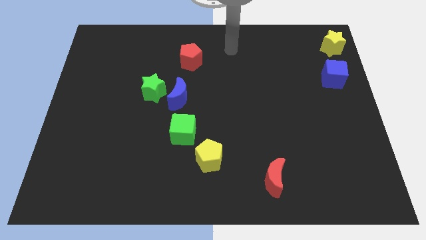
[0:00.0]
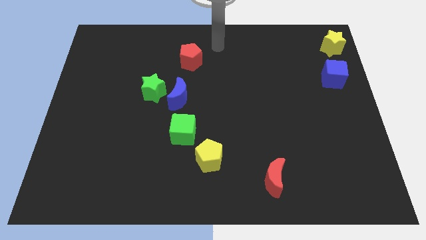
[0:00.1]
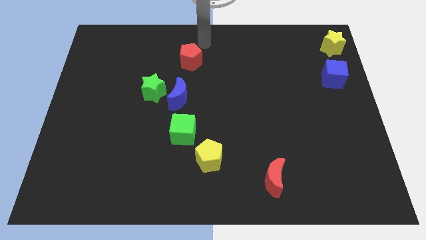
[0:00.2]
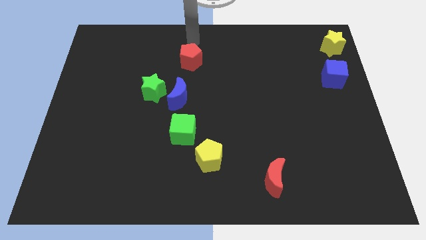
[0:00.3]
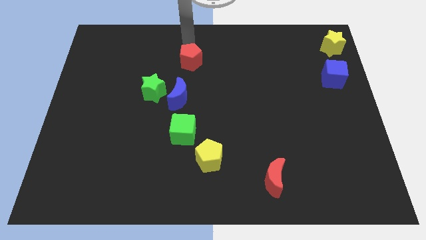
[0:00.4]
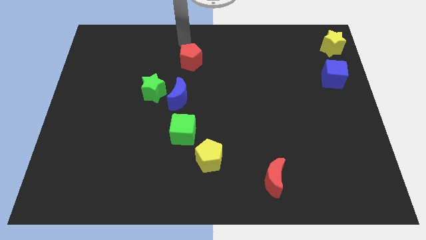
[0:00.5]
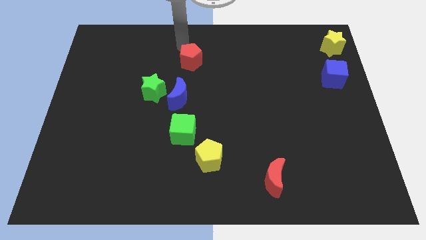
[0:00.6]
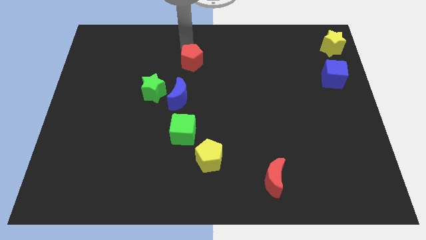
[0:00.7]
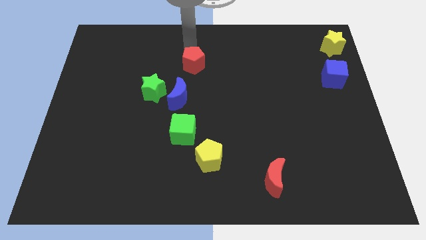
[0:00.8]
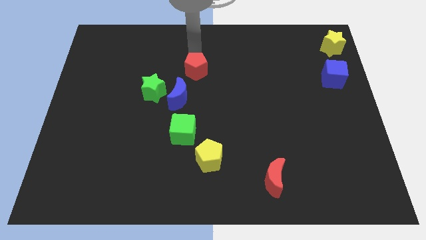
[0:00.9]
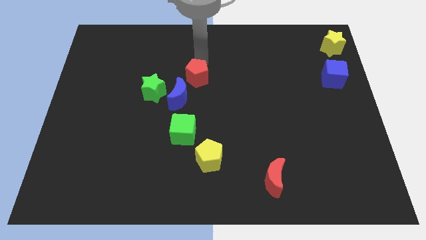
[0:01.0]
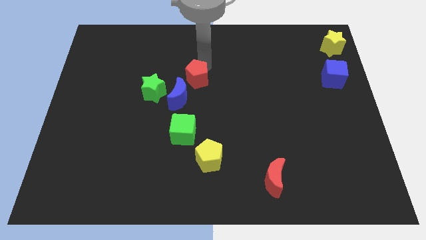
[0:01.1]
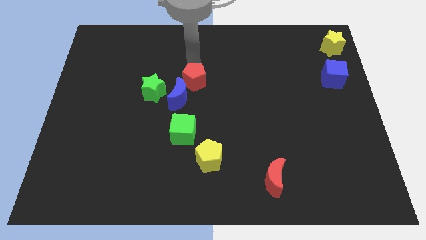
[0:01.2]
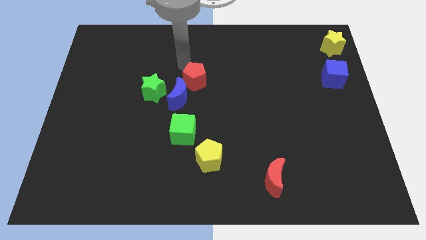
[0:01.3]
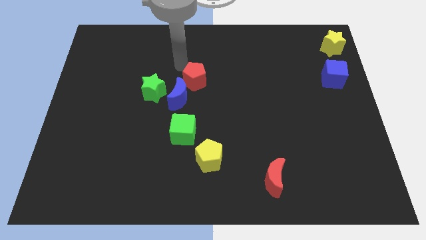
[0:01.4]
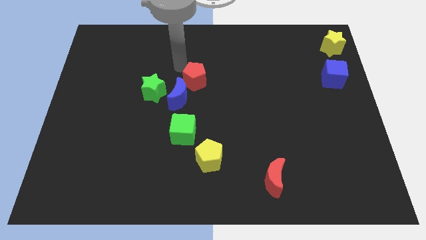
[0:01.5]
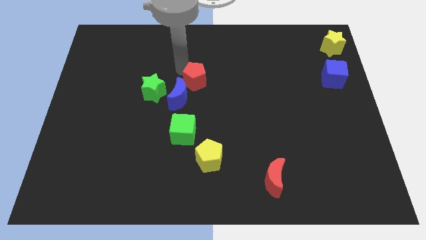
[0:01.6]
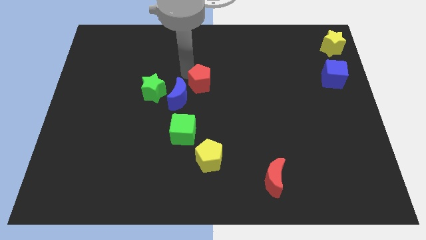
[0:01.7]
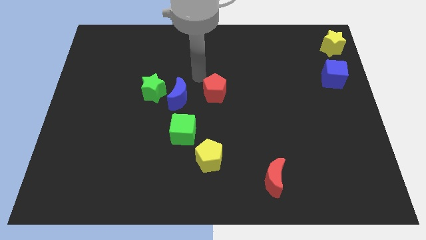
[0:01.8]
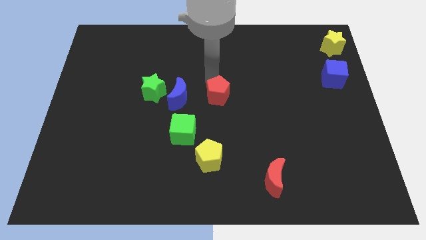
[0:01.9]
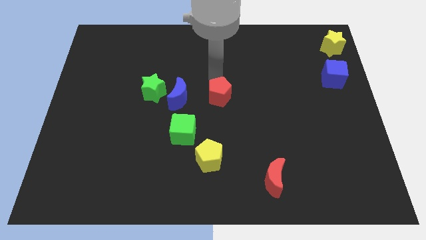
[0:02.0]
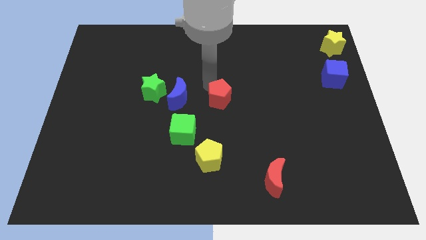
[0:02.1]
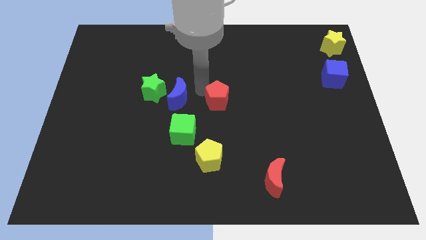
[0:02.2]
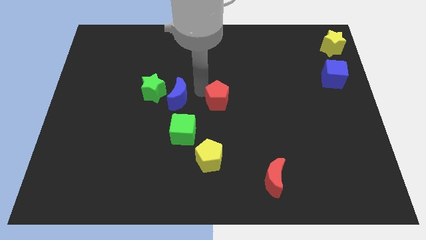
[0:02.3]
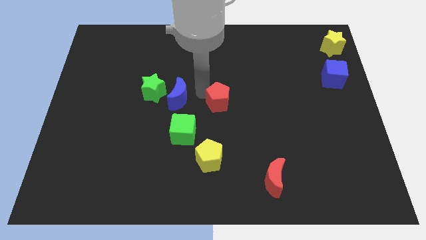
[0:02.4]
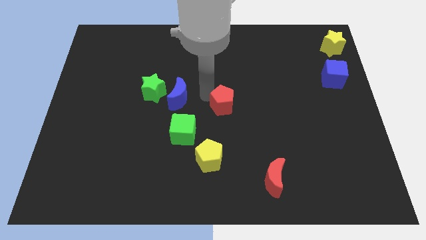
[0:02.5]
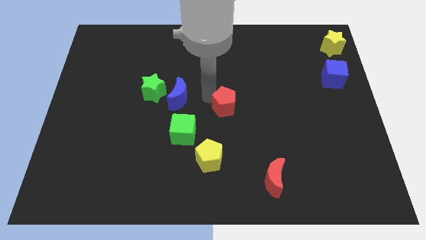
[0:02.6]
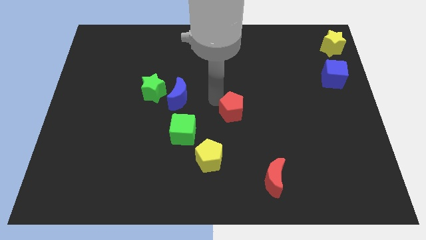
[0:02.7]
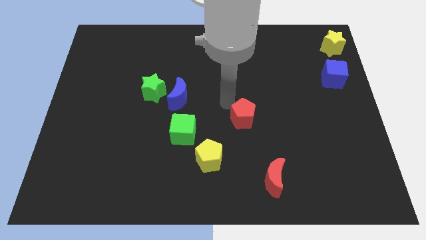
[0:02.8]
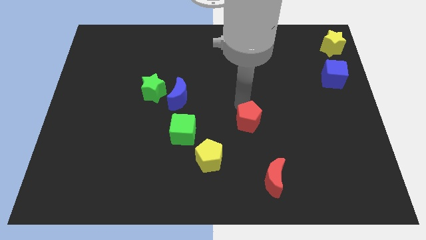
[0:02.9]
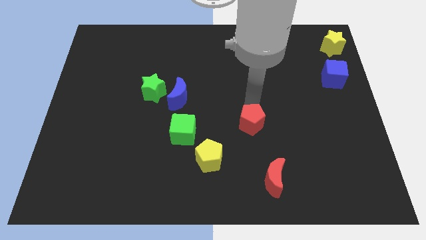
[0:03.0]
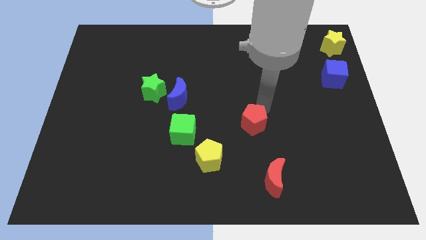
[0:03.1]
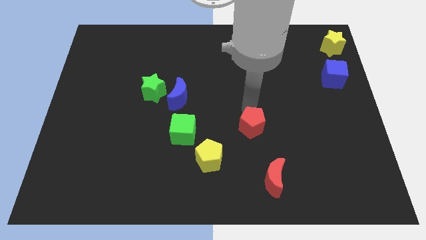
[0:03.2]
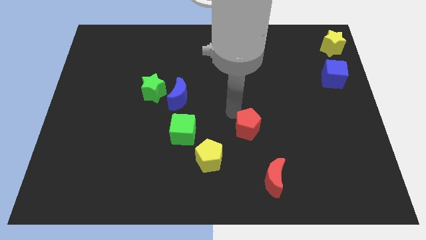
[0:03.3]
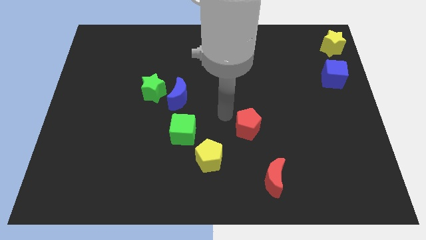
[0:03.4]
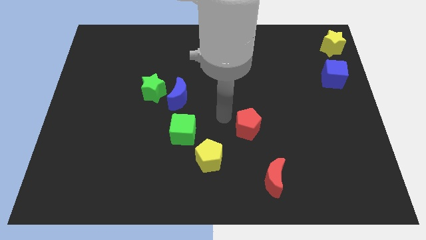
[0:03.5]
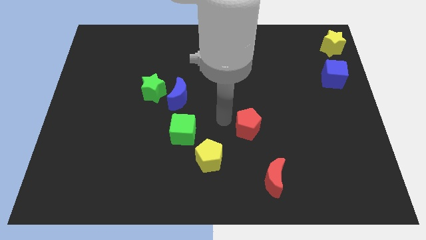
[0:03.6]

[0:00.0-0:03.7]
move red pentagon to the right of green cube

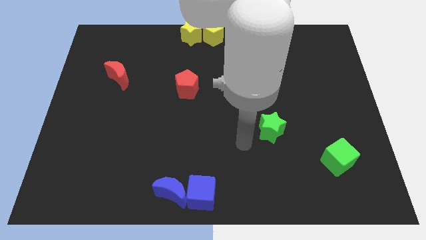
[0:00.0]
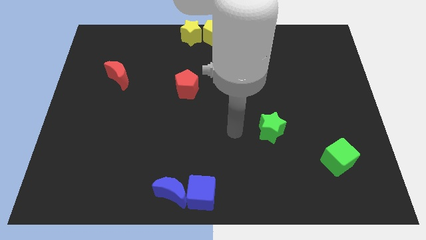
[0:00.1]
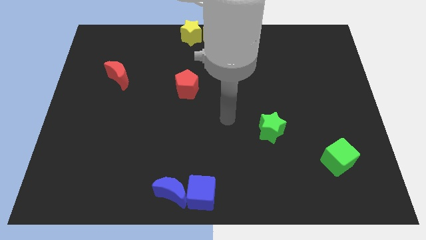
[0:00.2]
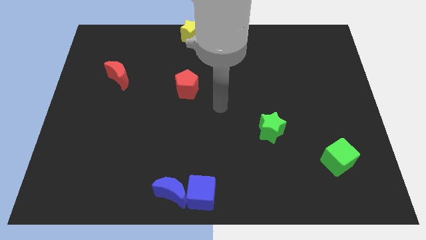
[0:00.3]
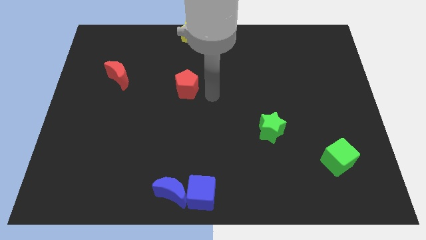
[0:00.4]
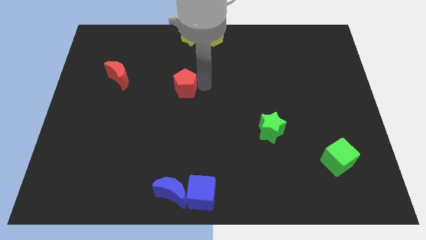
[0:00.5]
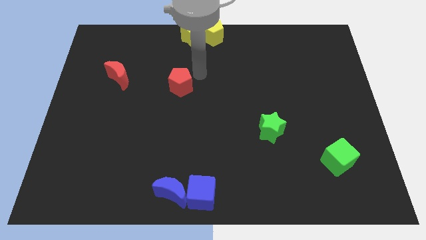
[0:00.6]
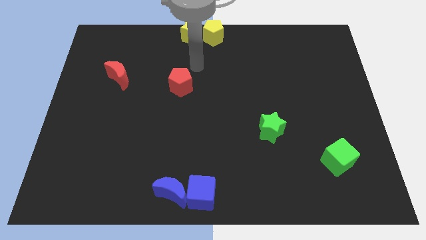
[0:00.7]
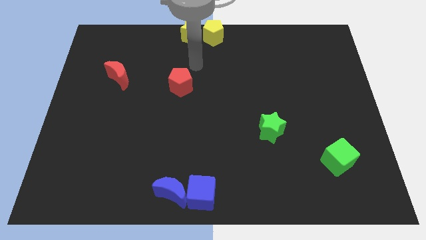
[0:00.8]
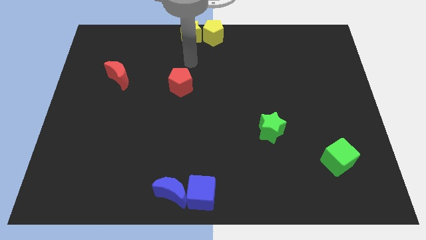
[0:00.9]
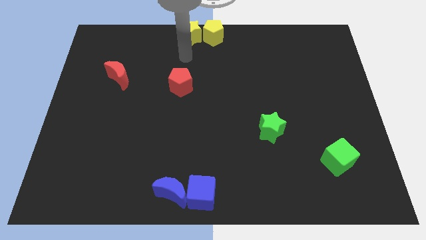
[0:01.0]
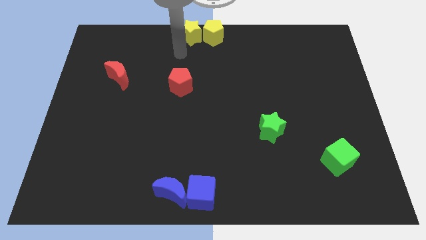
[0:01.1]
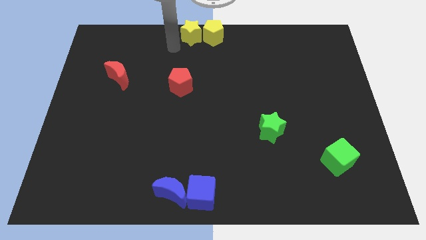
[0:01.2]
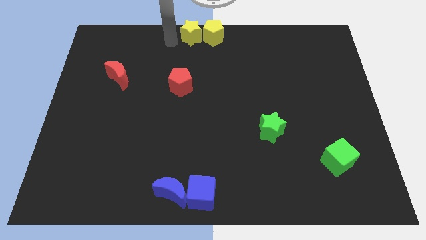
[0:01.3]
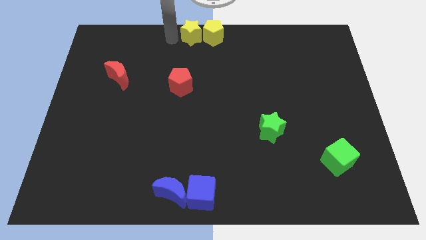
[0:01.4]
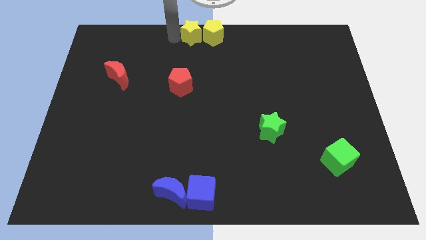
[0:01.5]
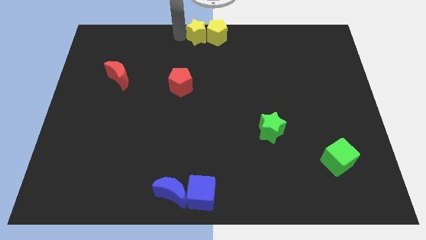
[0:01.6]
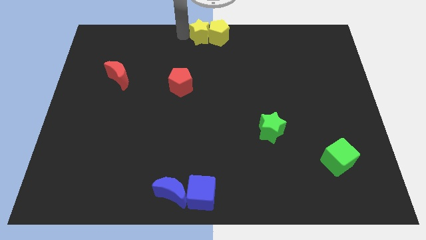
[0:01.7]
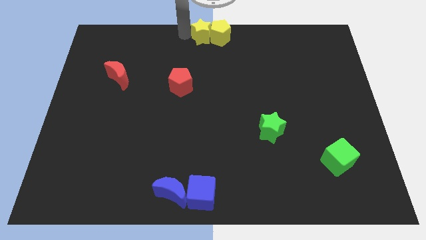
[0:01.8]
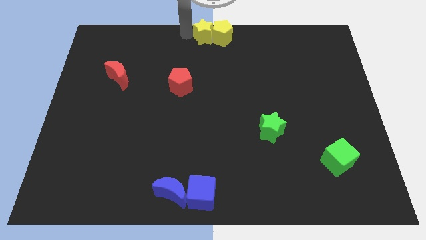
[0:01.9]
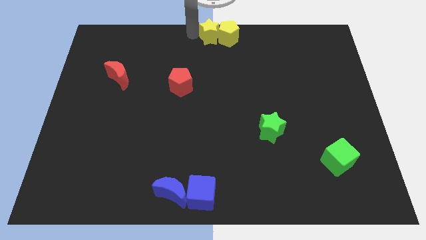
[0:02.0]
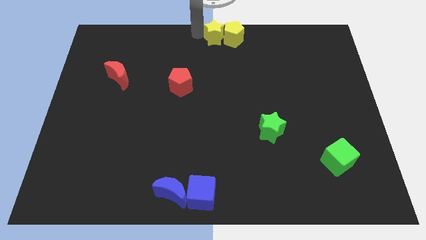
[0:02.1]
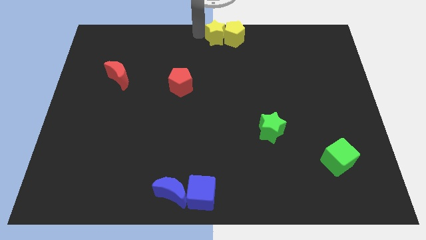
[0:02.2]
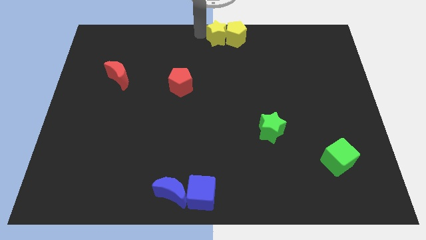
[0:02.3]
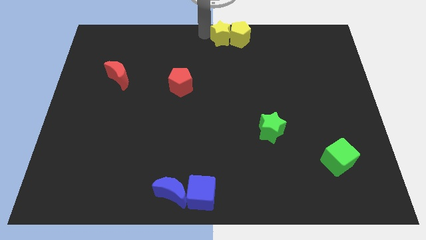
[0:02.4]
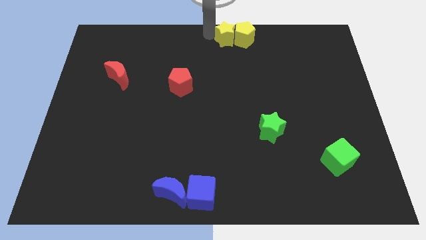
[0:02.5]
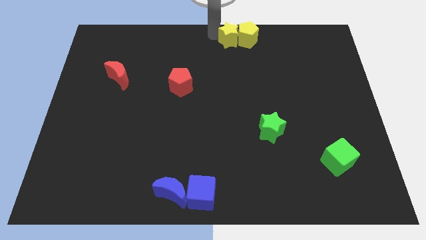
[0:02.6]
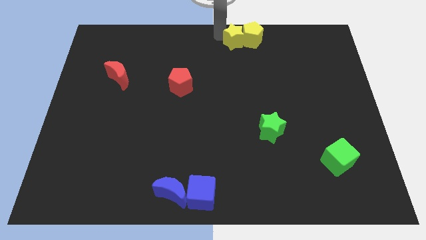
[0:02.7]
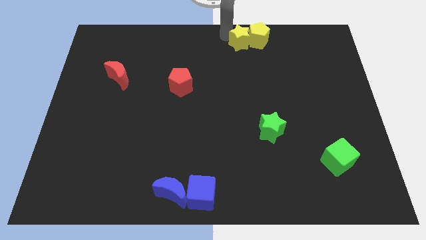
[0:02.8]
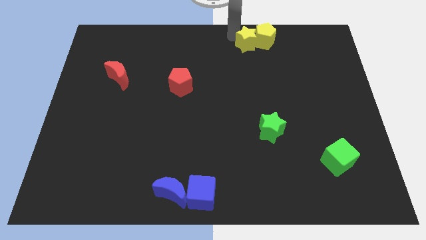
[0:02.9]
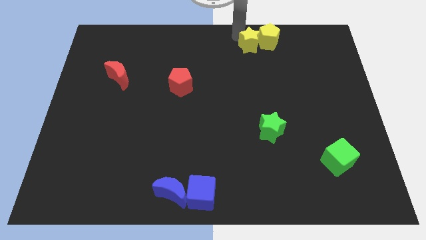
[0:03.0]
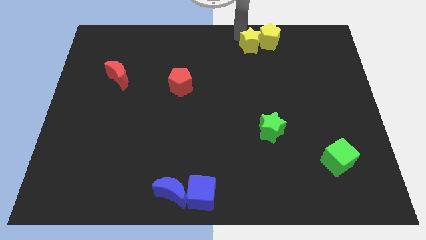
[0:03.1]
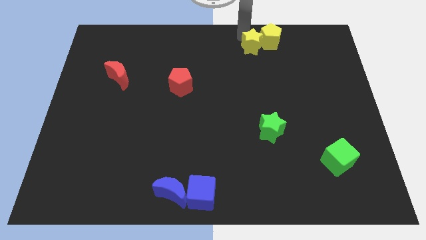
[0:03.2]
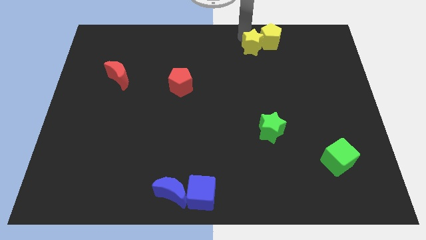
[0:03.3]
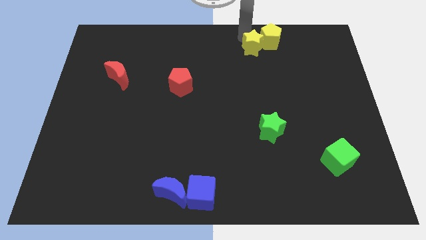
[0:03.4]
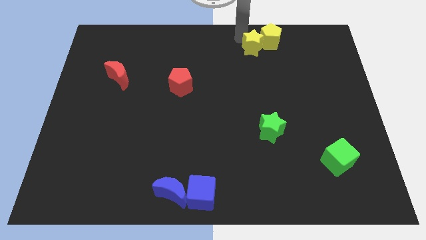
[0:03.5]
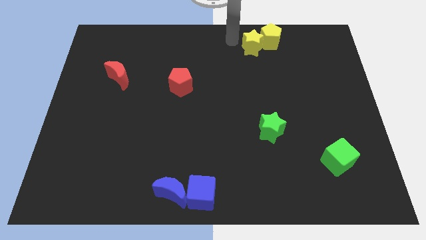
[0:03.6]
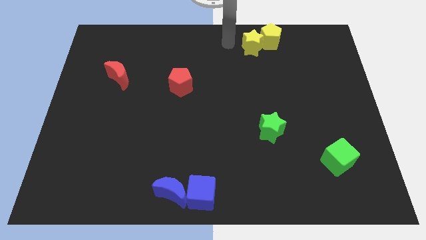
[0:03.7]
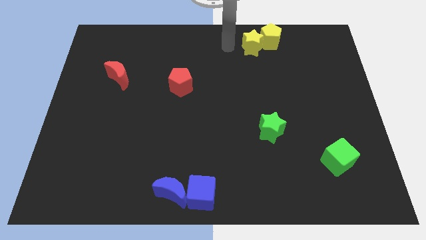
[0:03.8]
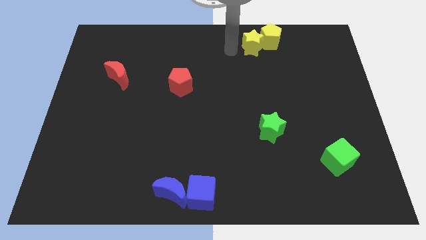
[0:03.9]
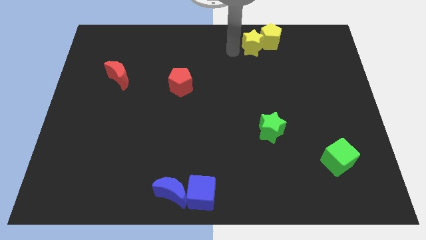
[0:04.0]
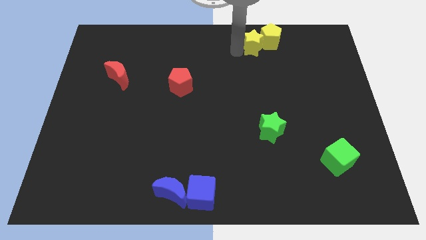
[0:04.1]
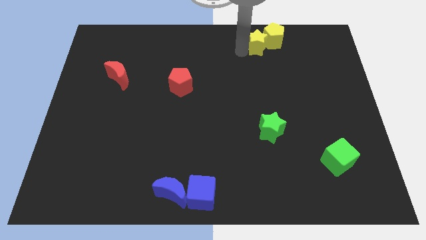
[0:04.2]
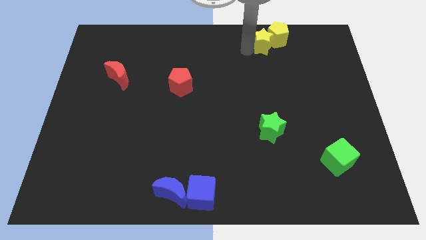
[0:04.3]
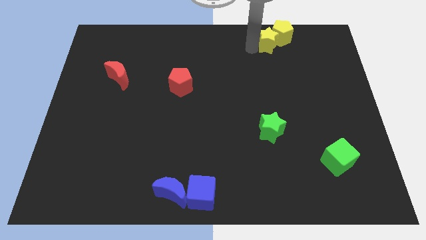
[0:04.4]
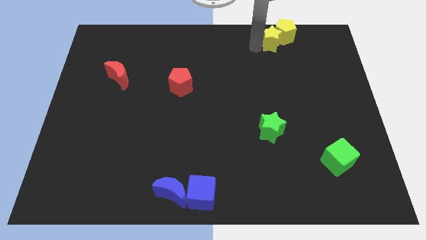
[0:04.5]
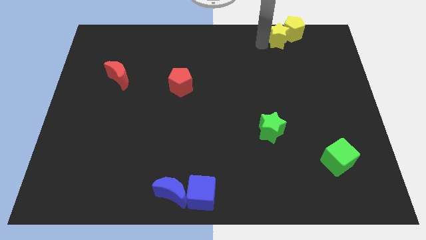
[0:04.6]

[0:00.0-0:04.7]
move yellow star towards top left

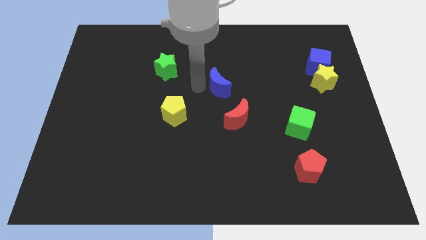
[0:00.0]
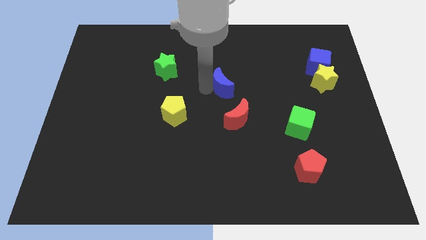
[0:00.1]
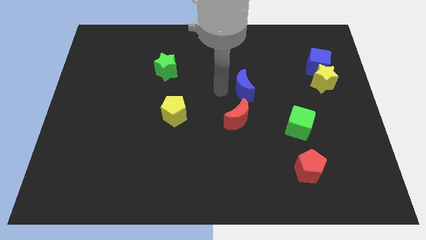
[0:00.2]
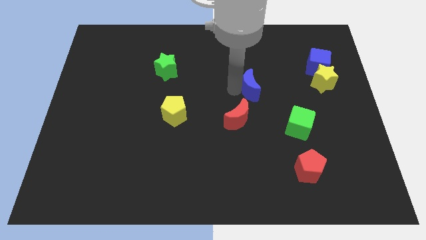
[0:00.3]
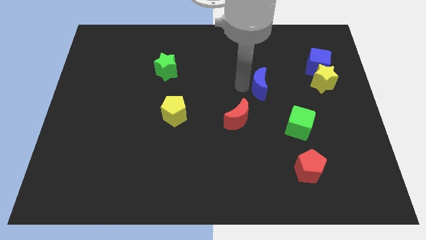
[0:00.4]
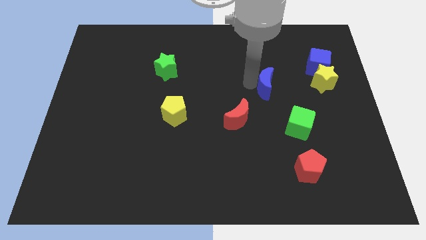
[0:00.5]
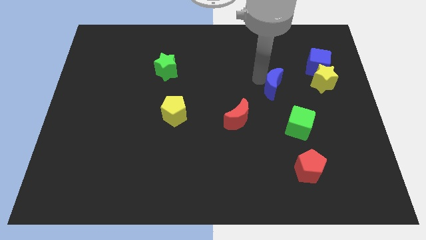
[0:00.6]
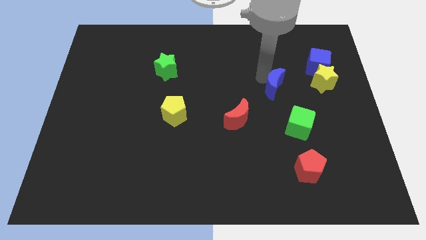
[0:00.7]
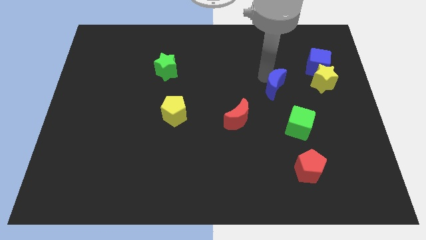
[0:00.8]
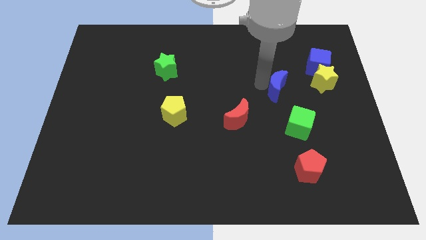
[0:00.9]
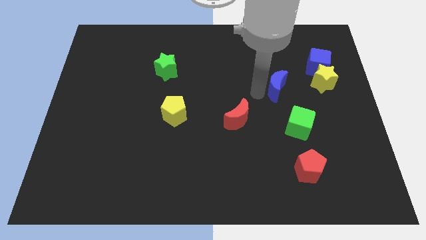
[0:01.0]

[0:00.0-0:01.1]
move blue moon to the bottom left of blue cube
